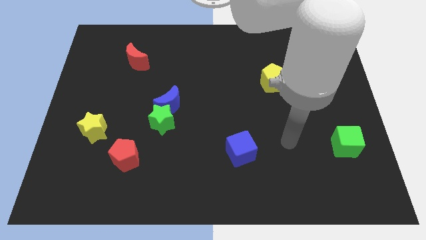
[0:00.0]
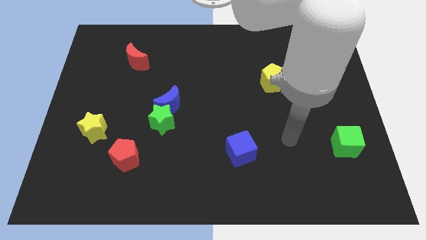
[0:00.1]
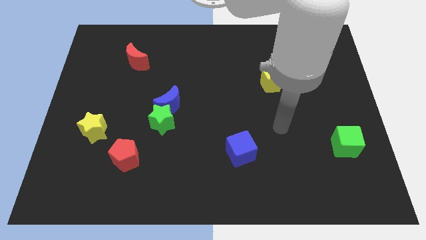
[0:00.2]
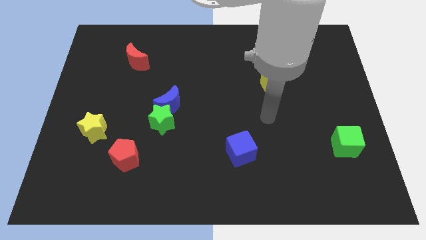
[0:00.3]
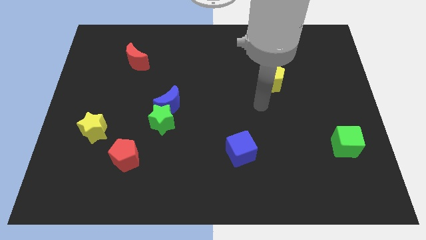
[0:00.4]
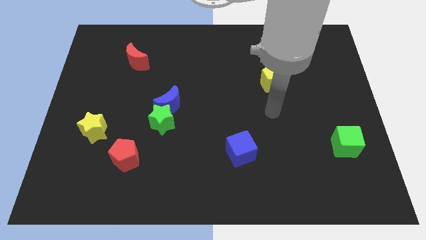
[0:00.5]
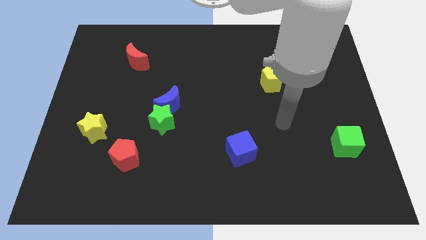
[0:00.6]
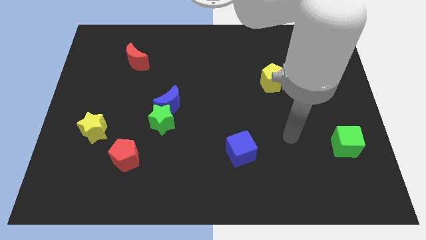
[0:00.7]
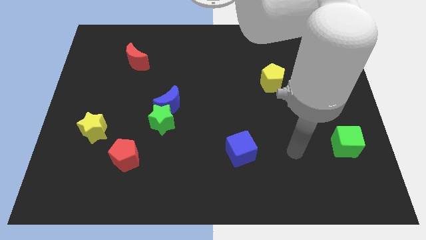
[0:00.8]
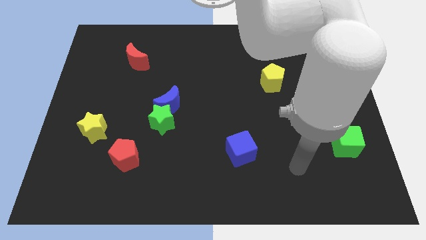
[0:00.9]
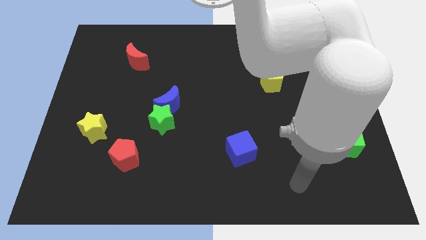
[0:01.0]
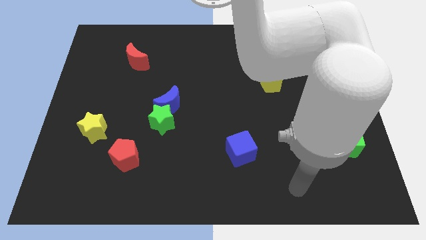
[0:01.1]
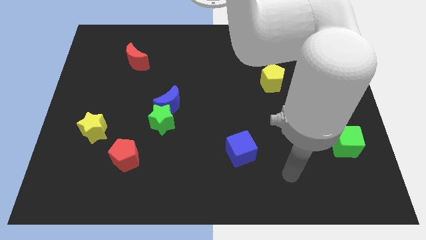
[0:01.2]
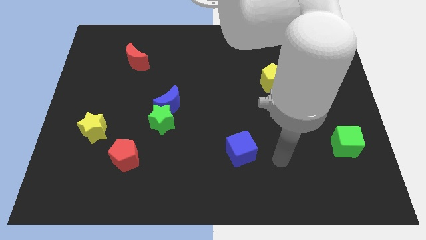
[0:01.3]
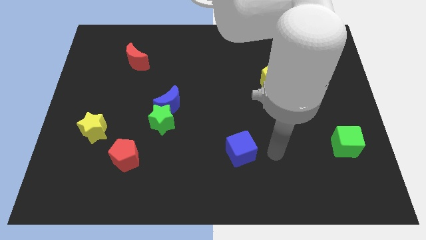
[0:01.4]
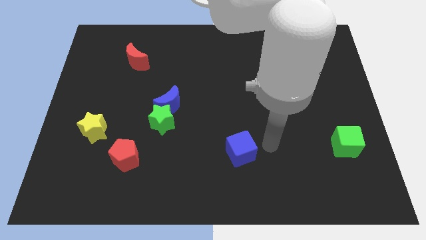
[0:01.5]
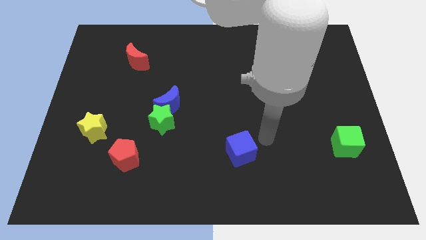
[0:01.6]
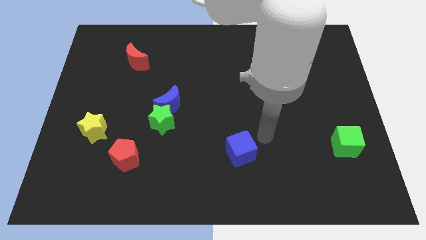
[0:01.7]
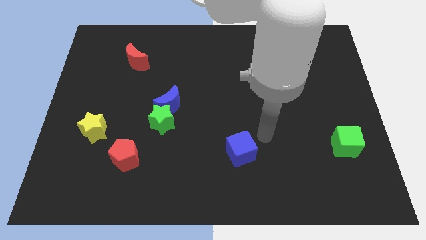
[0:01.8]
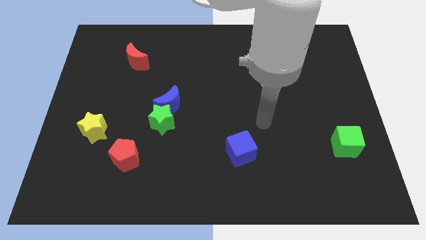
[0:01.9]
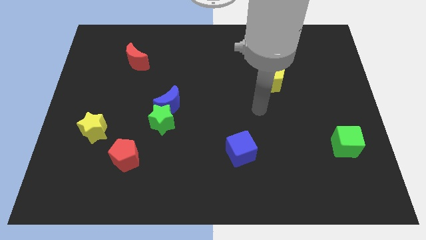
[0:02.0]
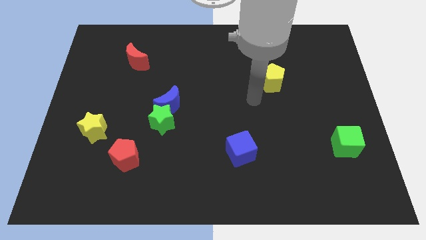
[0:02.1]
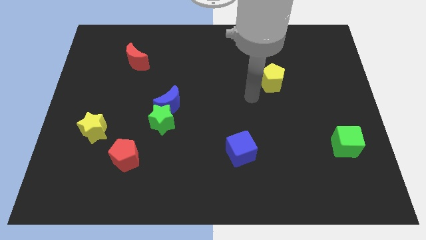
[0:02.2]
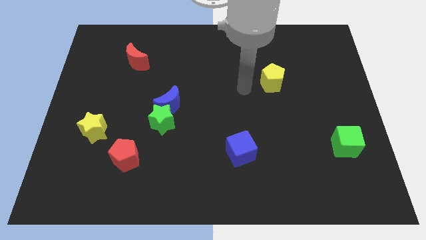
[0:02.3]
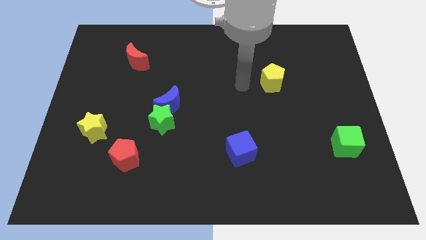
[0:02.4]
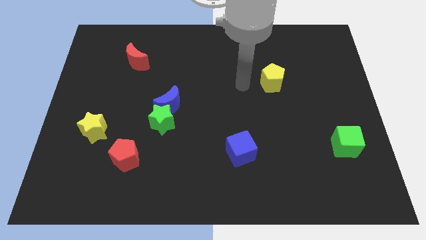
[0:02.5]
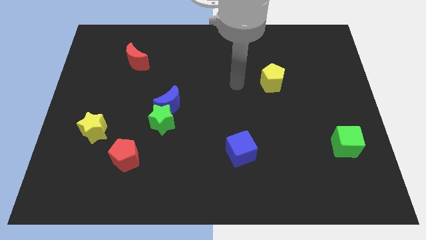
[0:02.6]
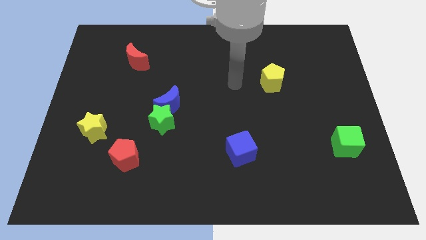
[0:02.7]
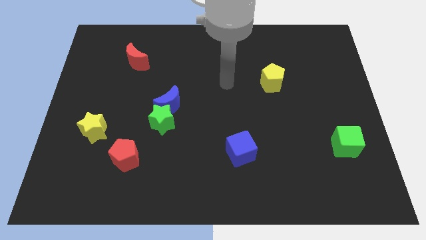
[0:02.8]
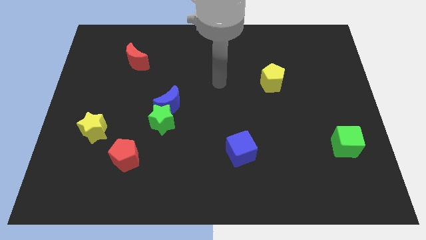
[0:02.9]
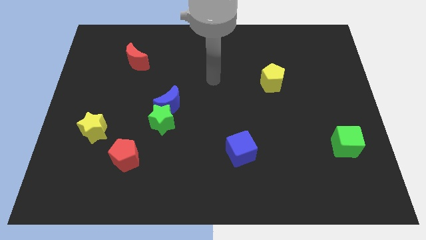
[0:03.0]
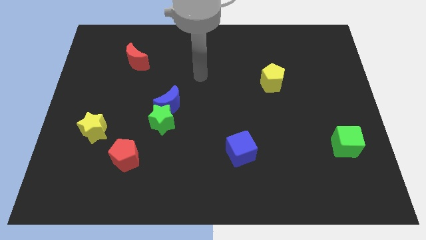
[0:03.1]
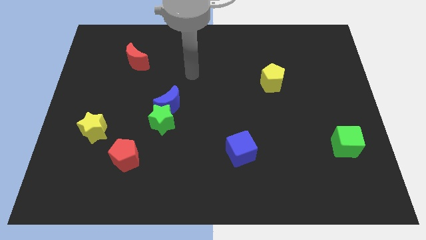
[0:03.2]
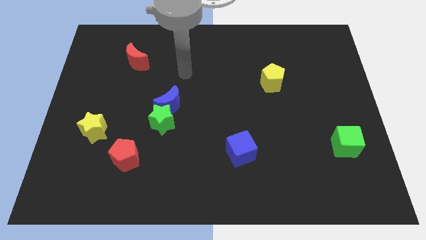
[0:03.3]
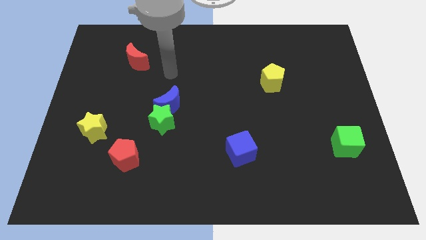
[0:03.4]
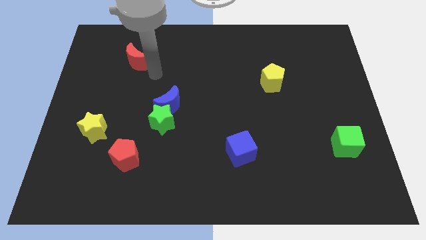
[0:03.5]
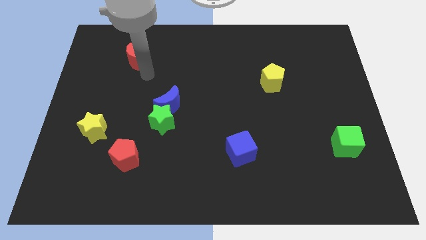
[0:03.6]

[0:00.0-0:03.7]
move your arm at the bottom of the crescent

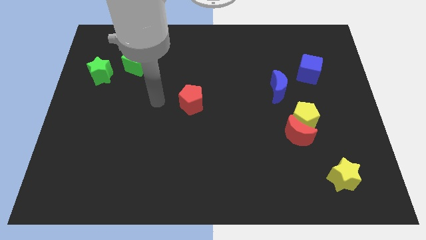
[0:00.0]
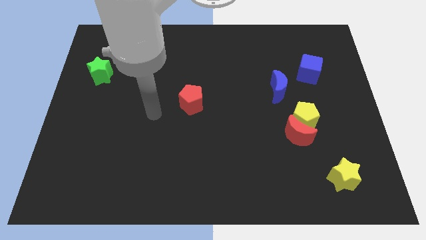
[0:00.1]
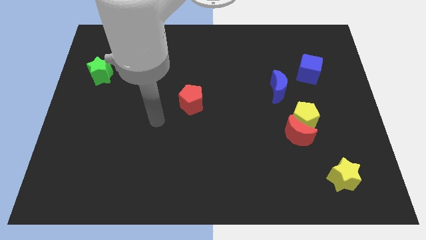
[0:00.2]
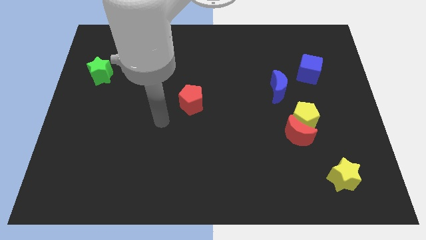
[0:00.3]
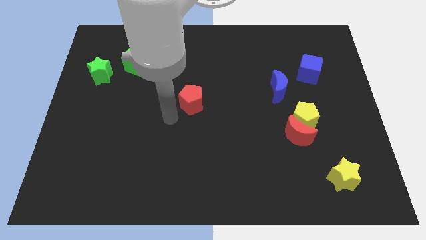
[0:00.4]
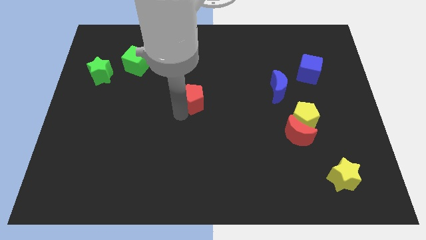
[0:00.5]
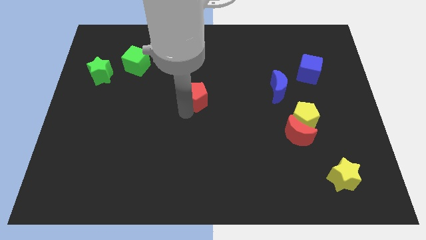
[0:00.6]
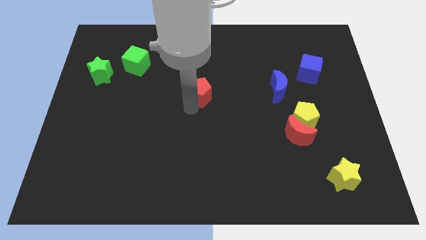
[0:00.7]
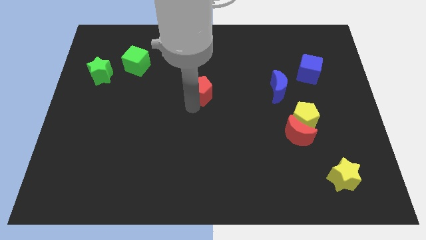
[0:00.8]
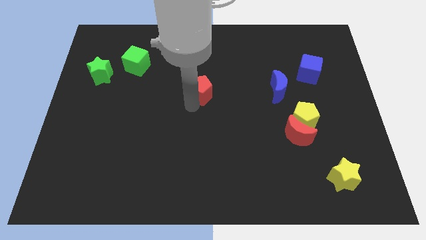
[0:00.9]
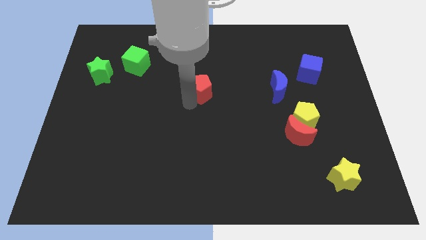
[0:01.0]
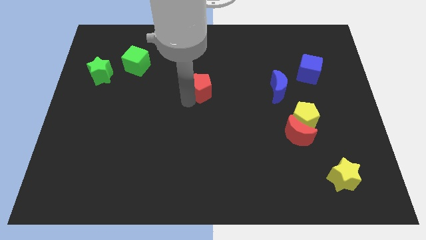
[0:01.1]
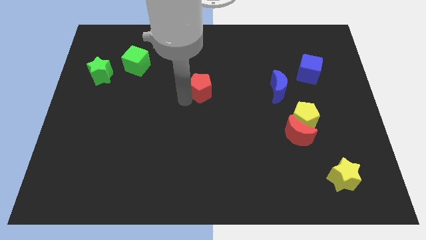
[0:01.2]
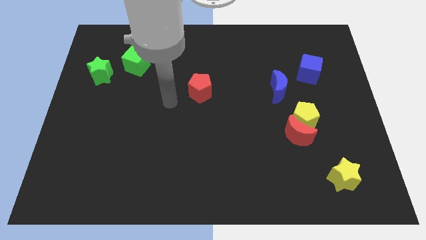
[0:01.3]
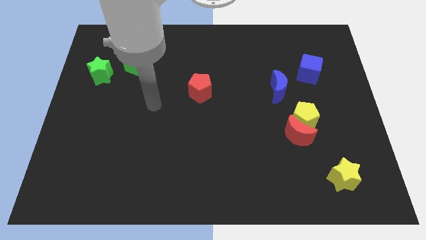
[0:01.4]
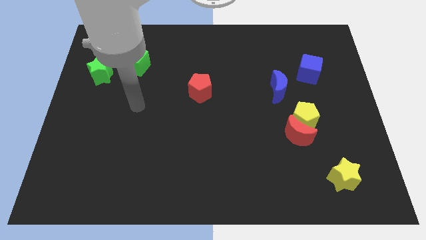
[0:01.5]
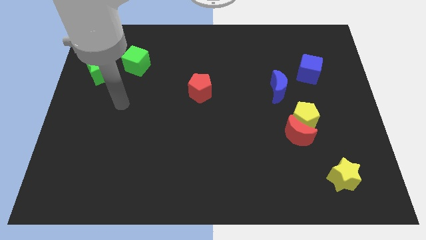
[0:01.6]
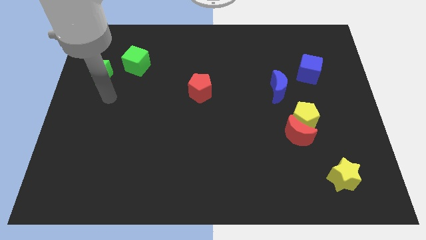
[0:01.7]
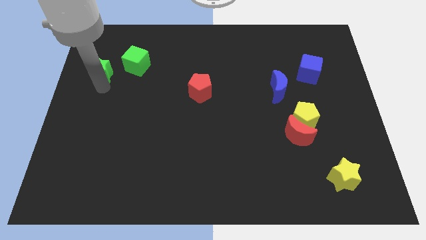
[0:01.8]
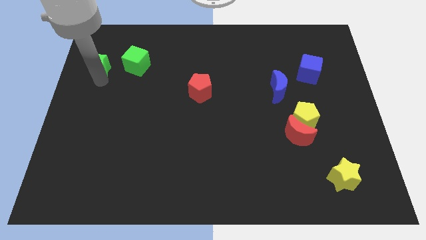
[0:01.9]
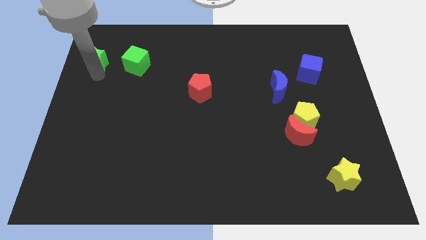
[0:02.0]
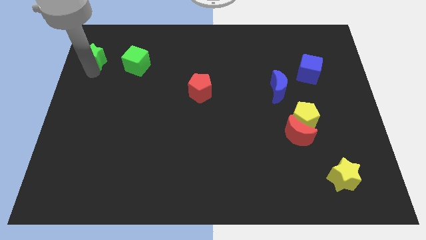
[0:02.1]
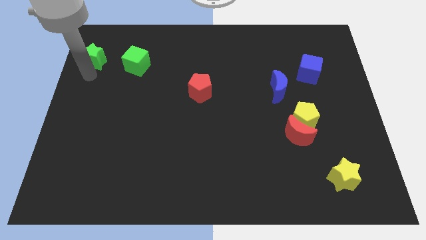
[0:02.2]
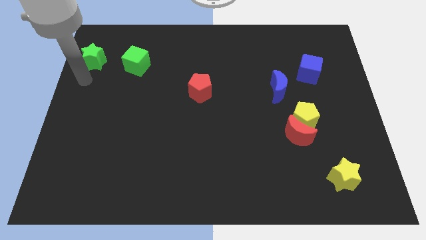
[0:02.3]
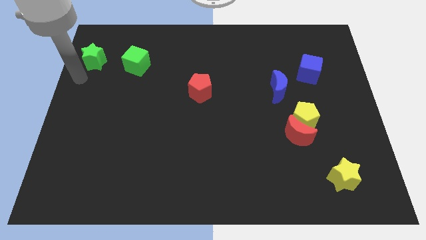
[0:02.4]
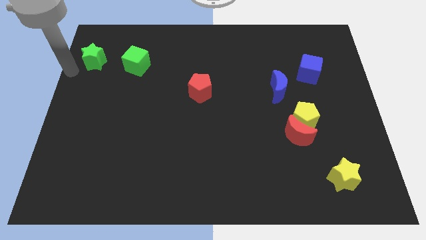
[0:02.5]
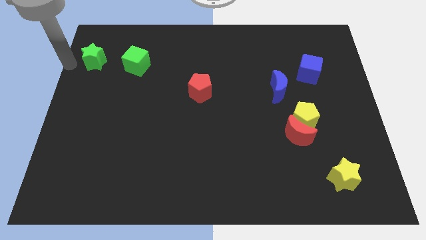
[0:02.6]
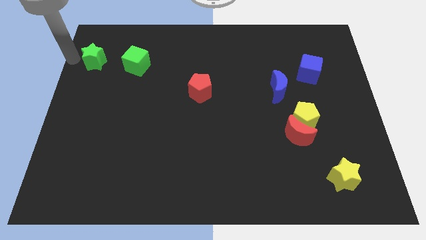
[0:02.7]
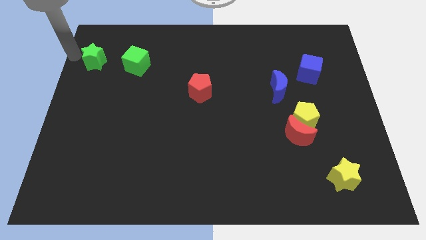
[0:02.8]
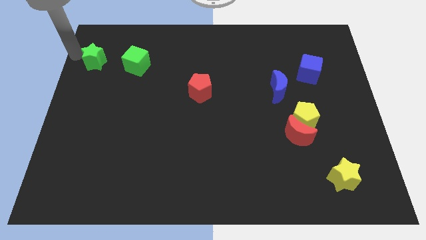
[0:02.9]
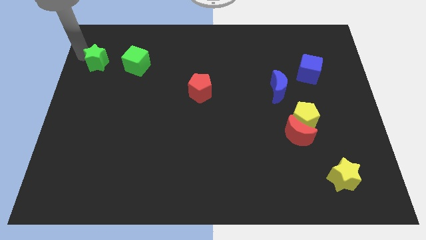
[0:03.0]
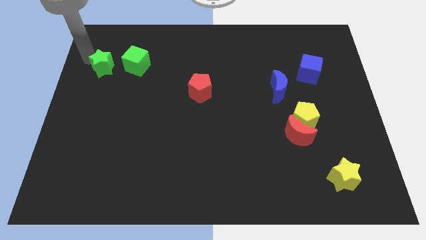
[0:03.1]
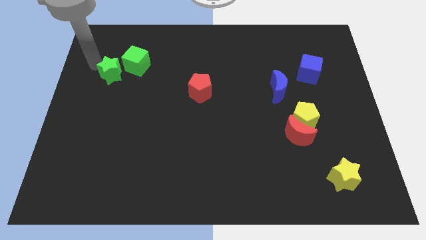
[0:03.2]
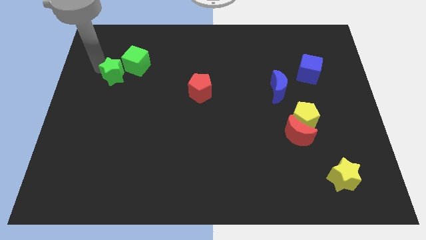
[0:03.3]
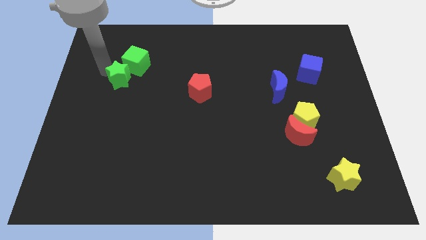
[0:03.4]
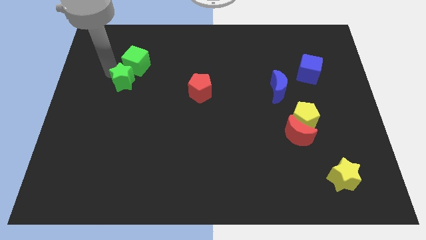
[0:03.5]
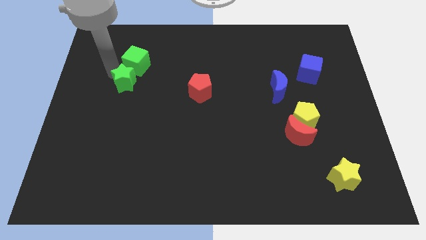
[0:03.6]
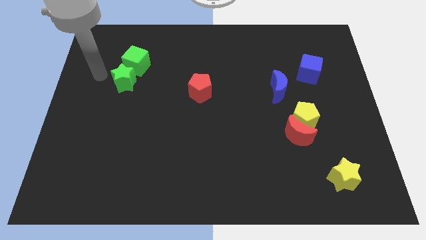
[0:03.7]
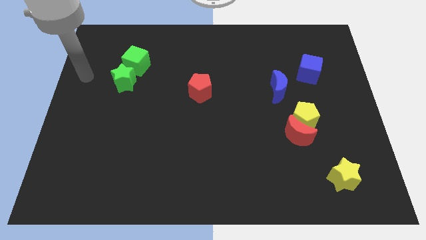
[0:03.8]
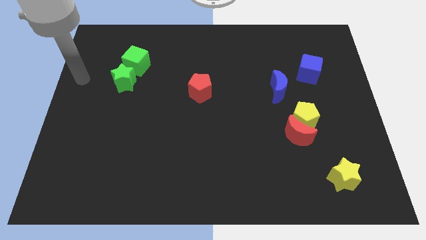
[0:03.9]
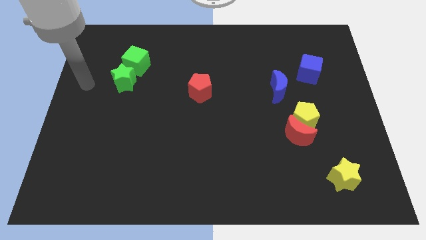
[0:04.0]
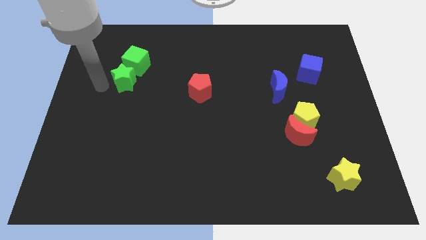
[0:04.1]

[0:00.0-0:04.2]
move green star below the green cube

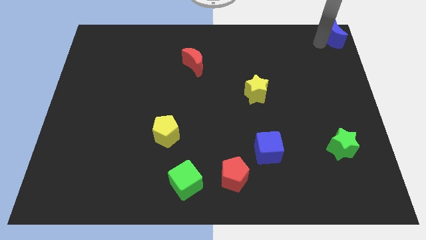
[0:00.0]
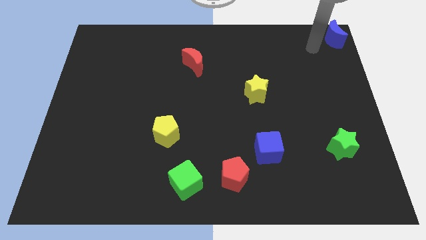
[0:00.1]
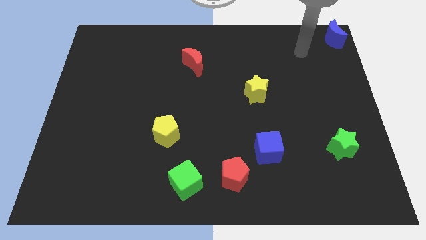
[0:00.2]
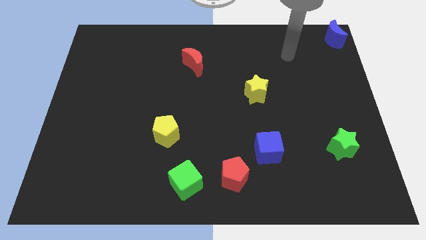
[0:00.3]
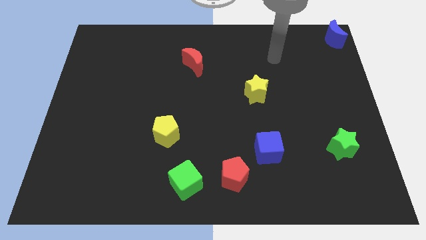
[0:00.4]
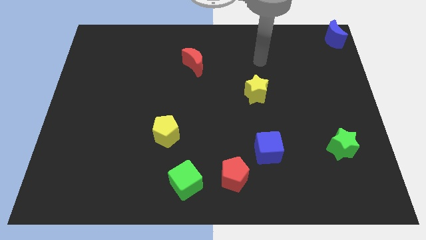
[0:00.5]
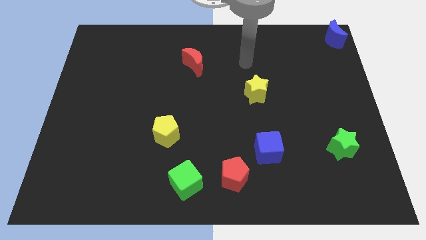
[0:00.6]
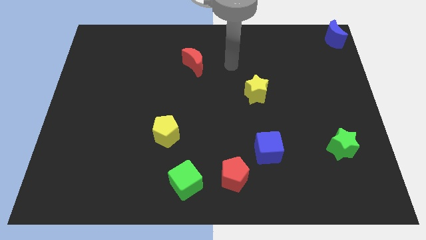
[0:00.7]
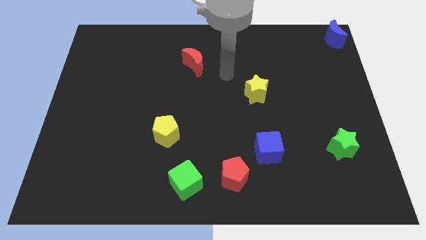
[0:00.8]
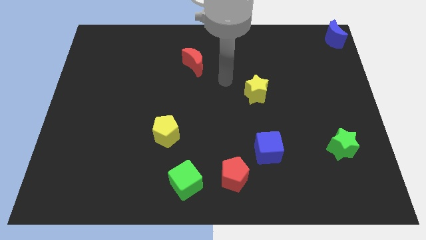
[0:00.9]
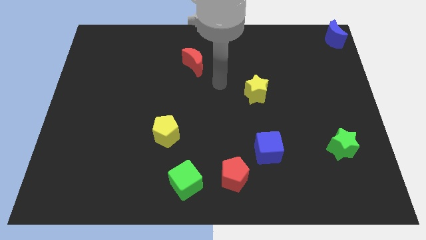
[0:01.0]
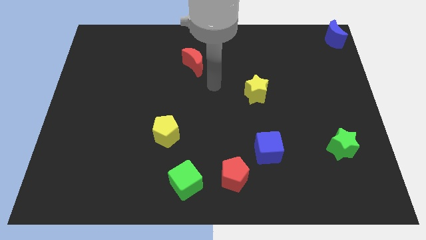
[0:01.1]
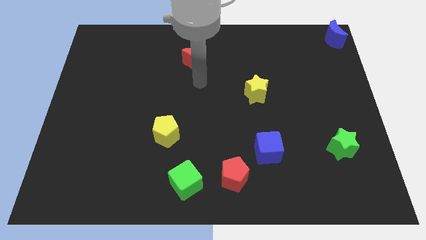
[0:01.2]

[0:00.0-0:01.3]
place your arm at the bottom of the red crescent
